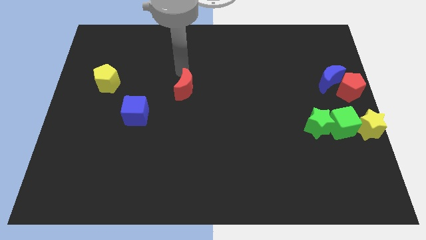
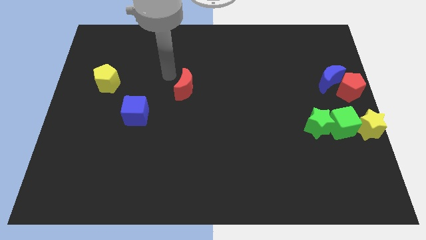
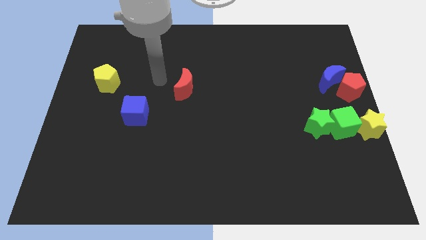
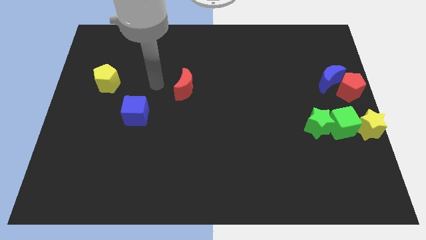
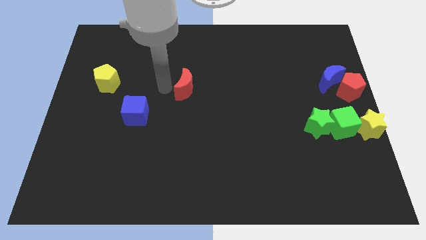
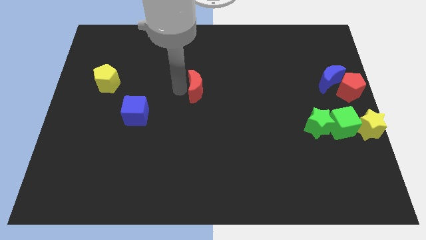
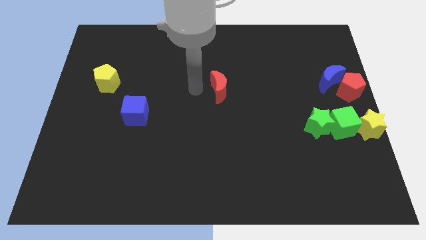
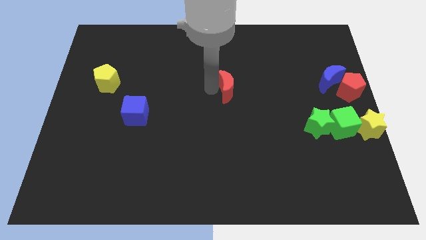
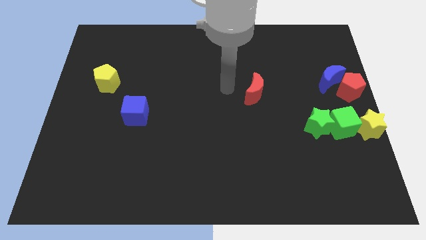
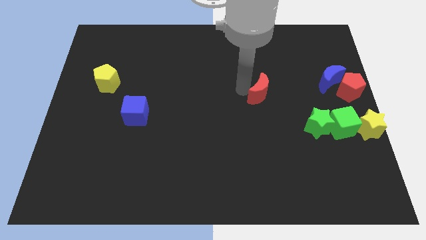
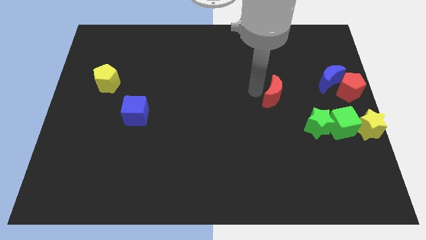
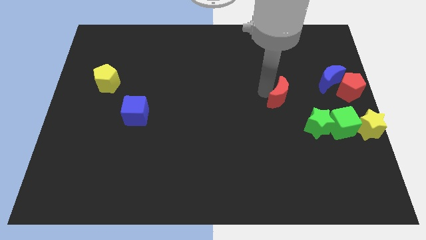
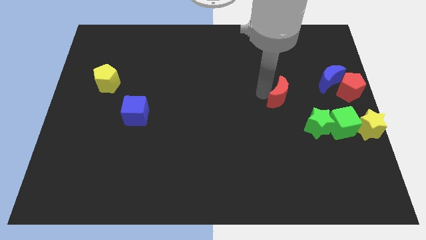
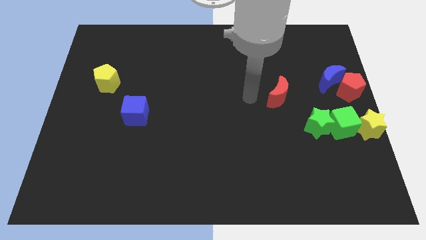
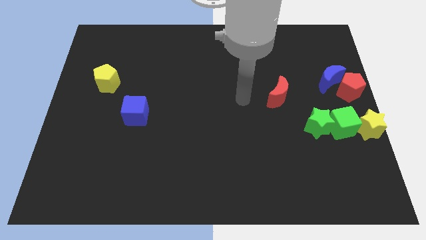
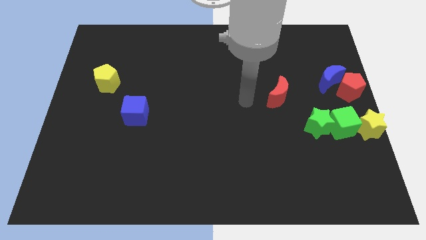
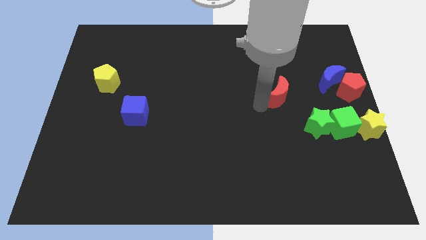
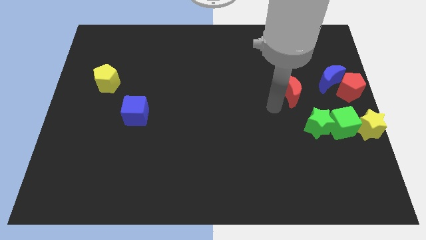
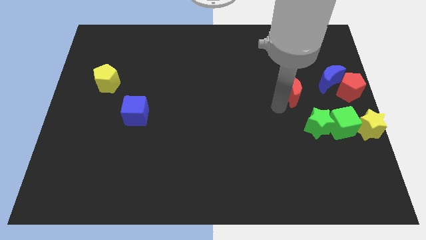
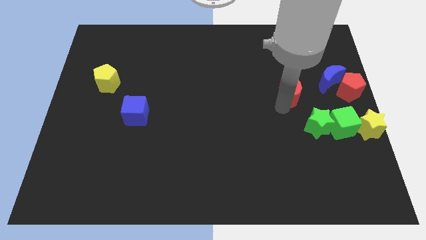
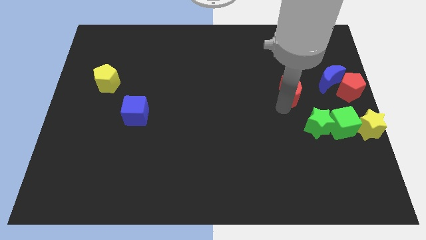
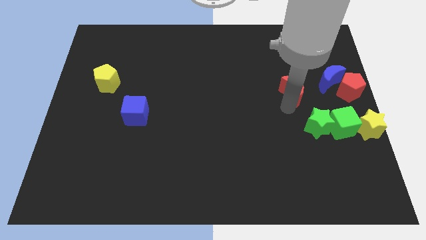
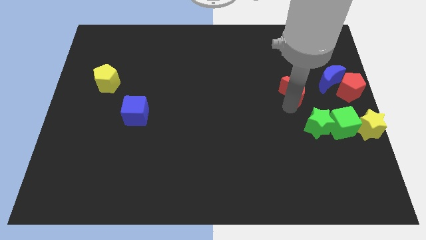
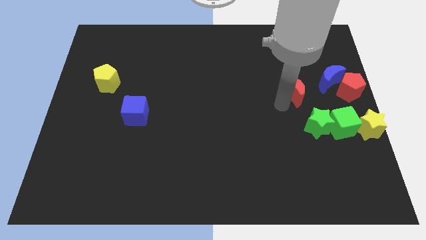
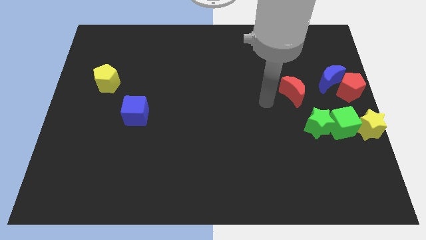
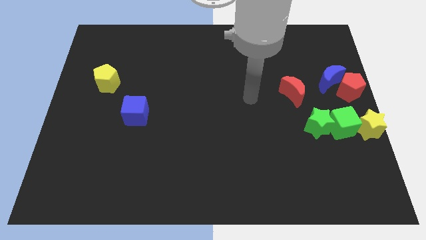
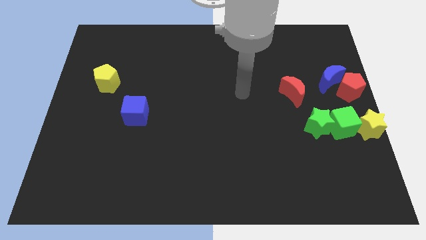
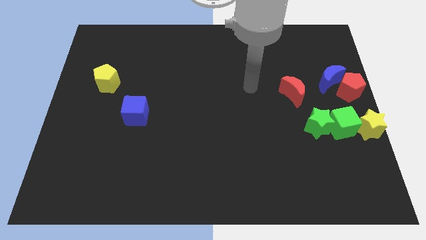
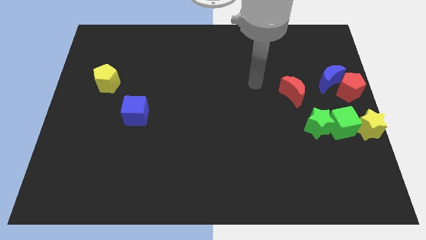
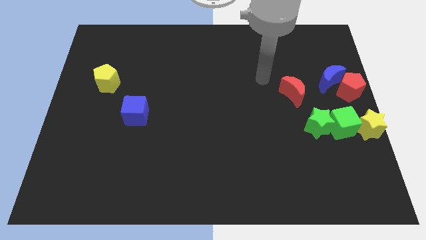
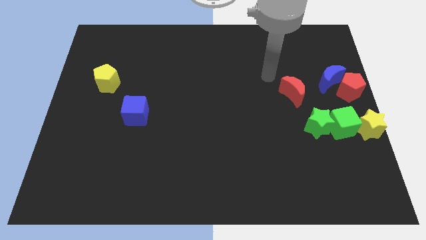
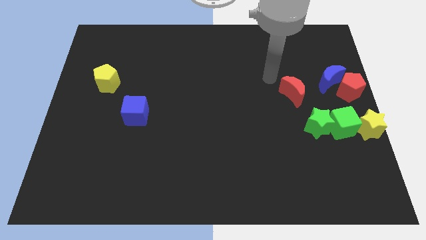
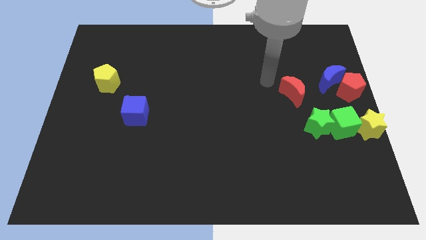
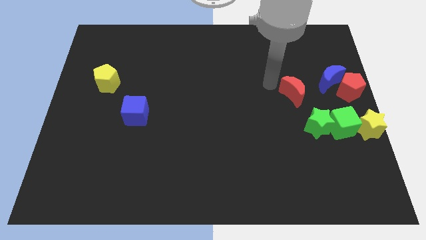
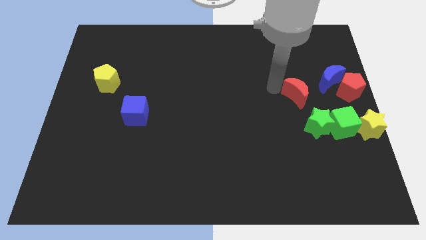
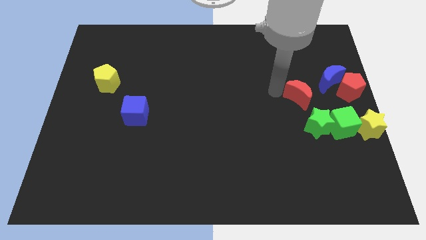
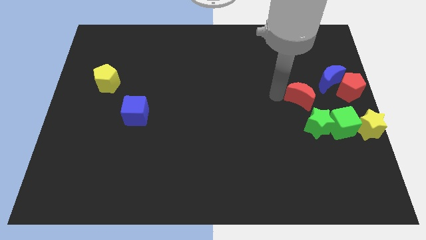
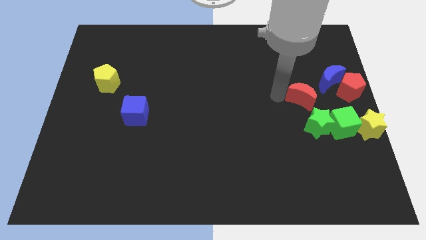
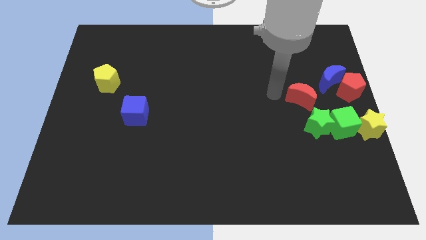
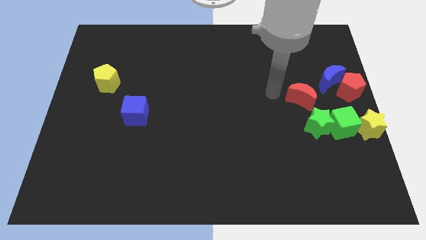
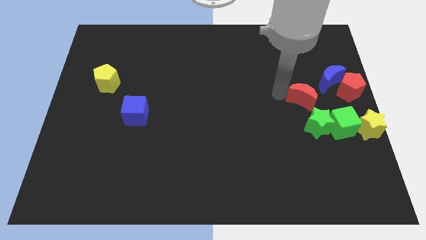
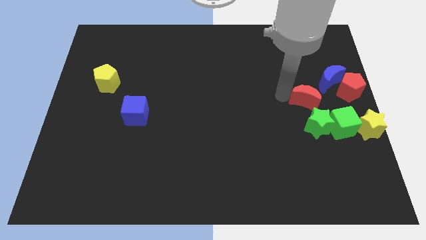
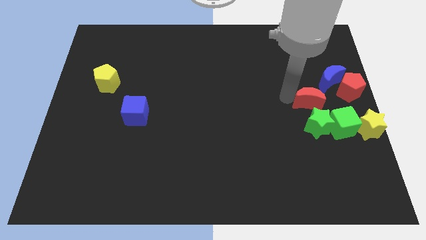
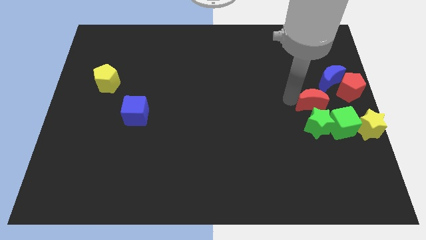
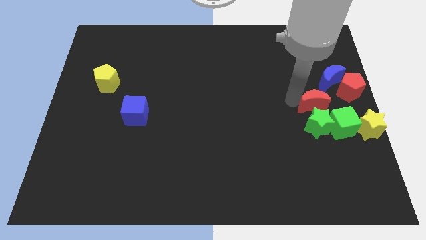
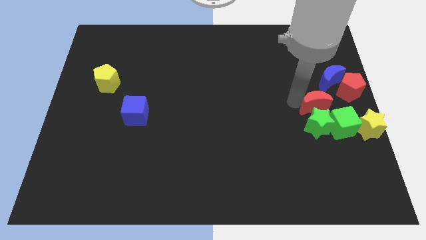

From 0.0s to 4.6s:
move the red crescent to the top of the green star

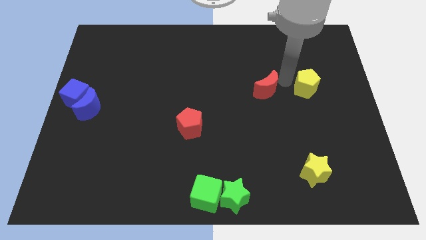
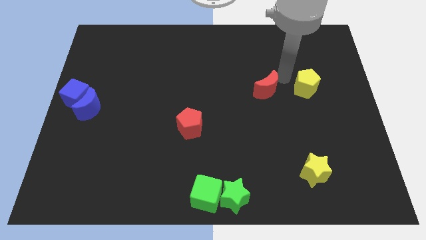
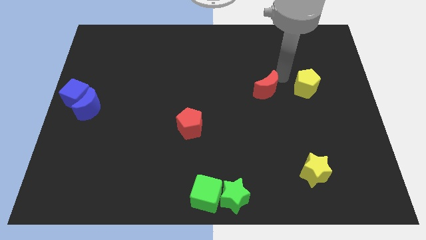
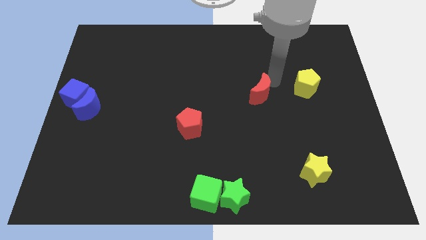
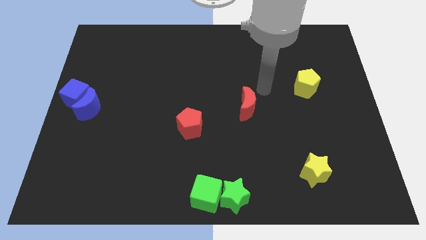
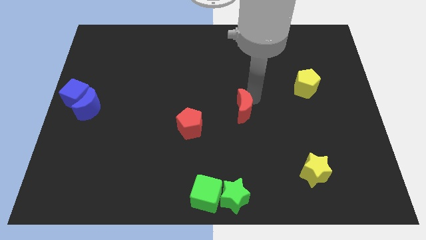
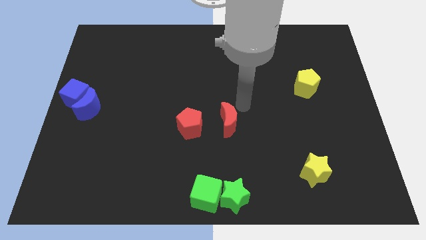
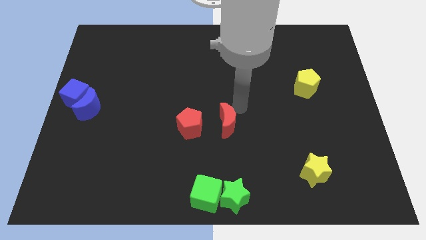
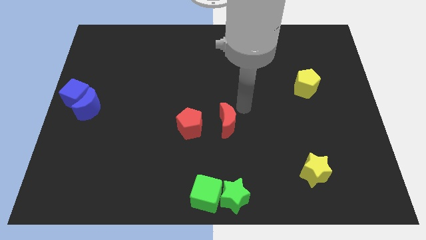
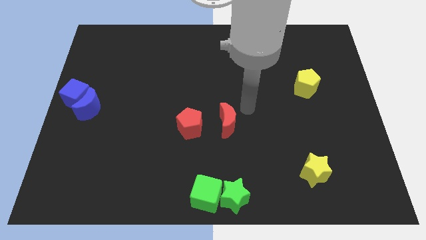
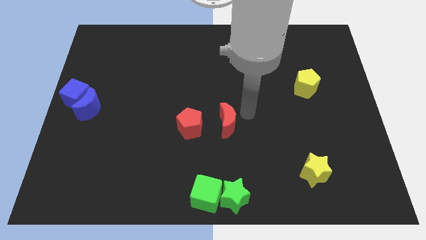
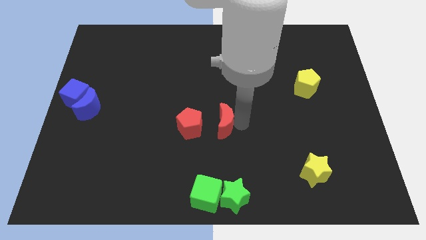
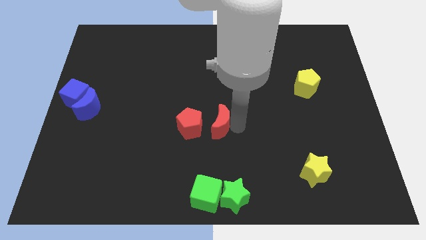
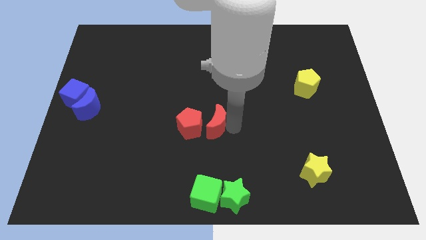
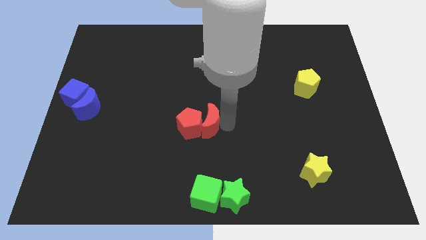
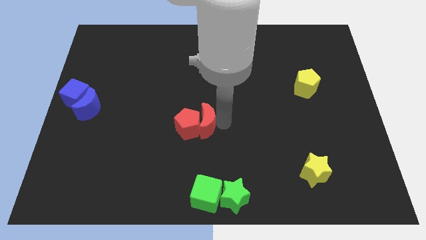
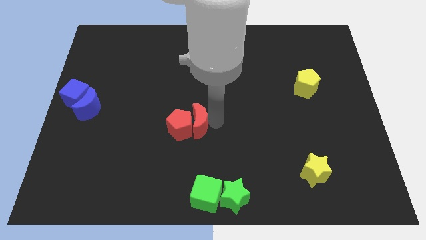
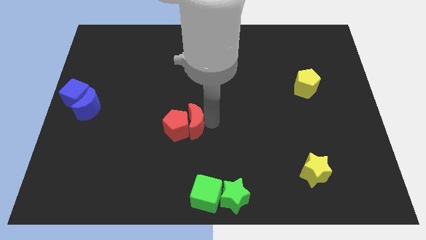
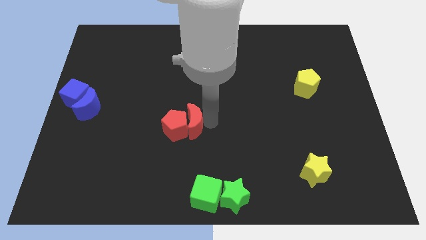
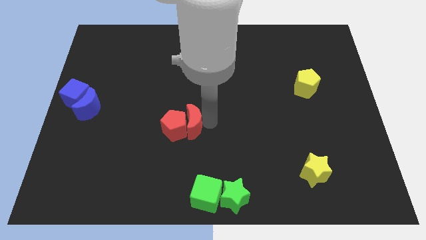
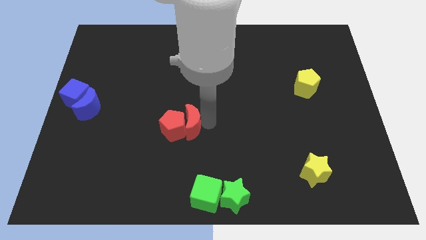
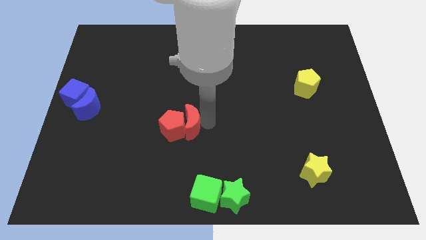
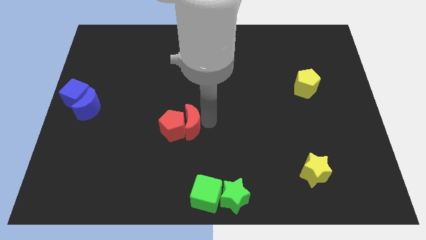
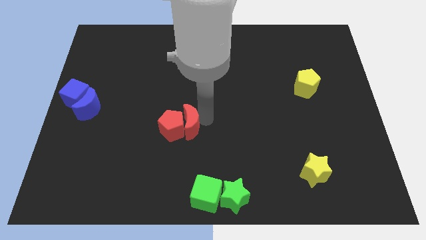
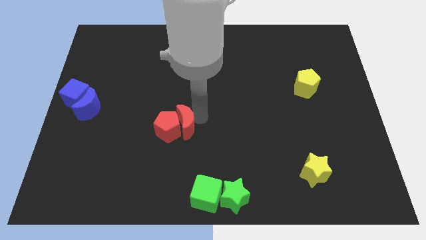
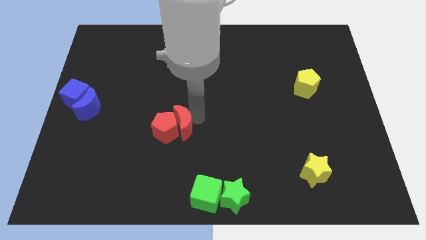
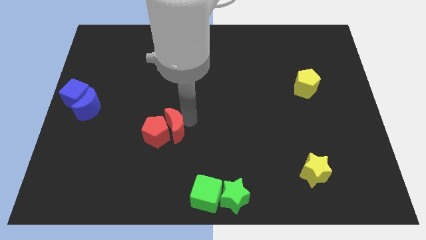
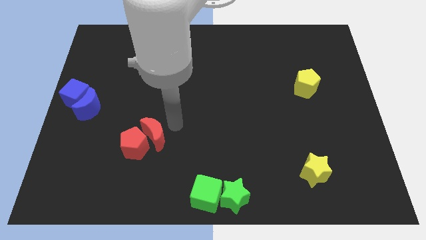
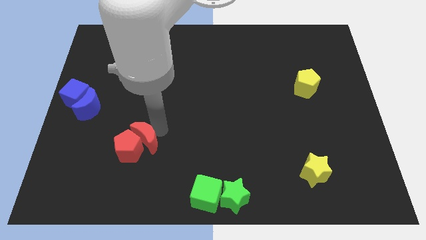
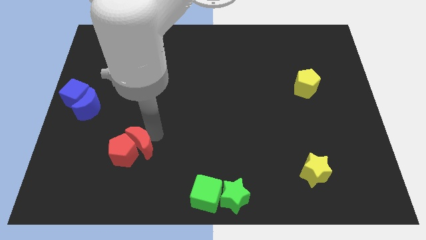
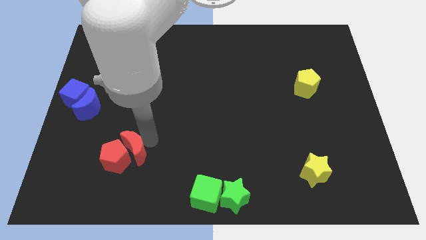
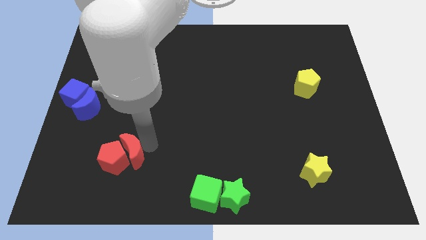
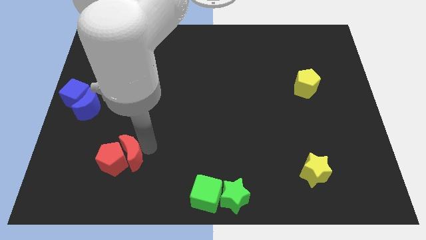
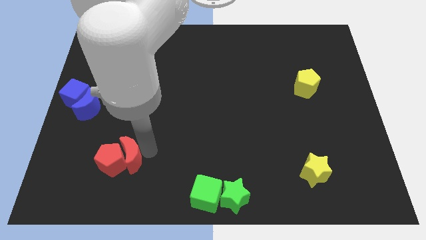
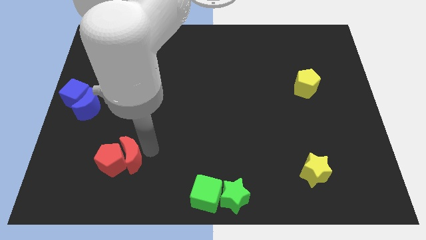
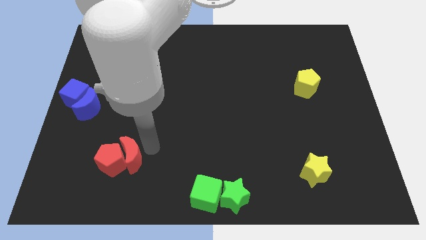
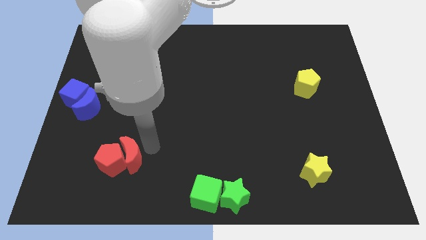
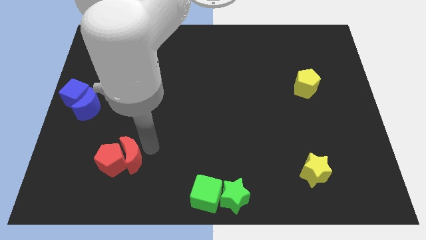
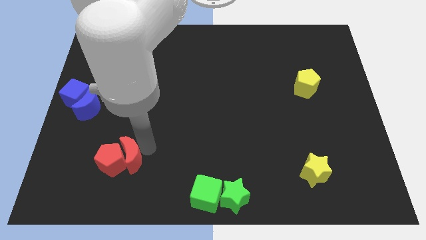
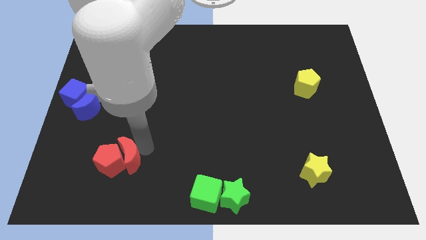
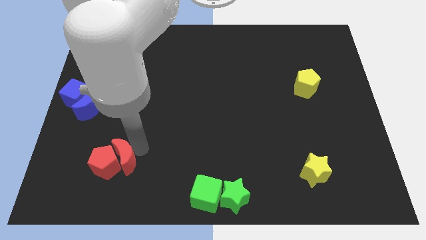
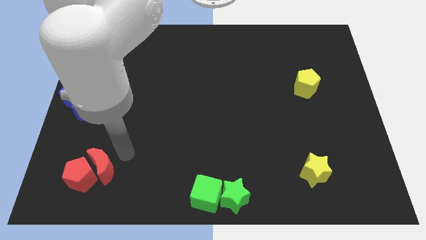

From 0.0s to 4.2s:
move the red crescent along with the red pentagon to the left bottom

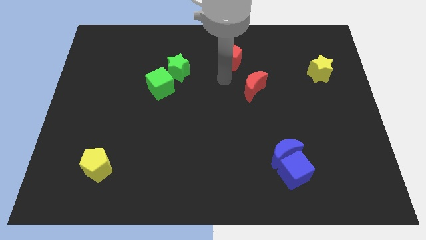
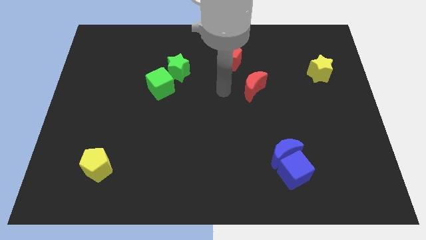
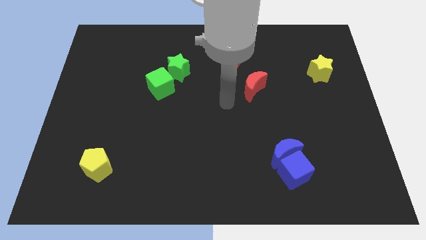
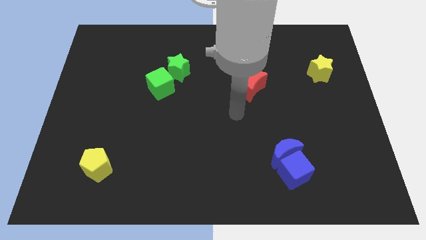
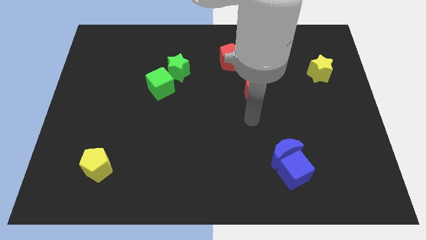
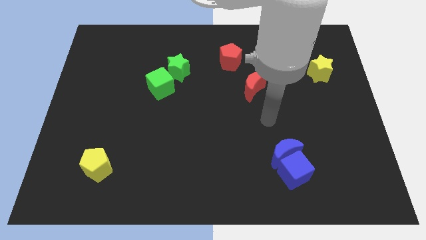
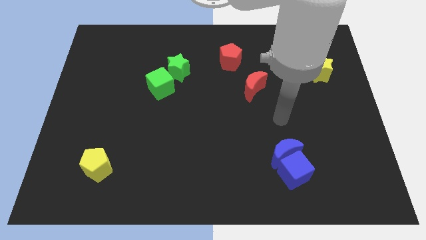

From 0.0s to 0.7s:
move the arm away from the red pentagon
